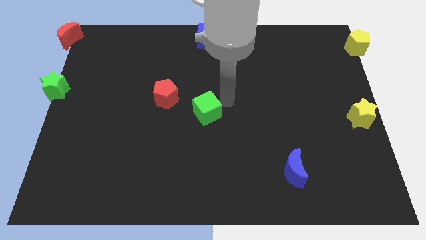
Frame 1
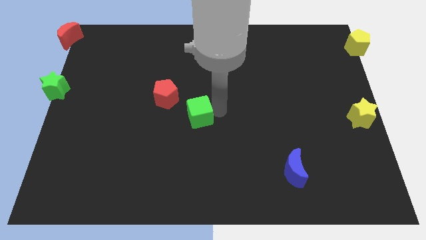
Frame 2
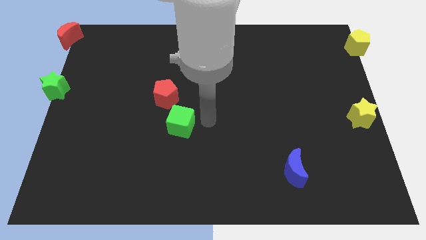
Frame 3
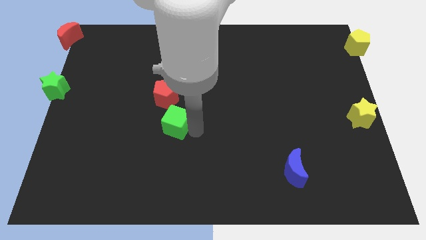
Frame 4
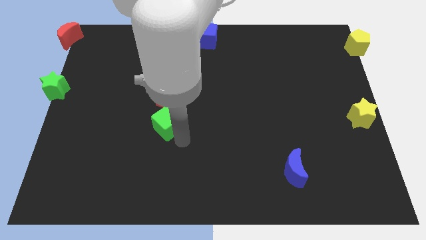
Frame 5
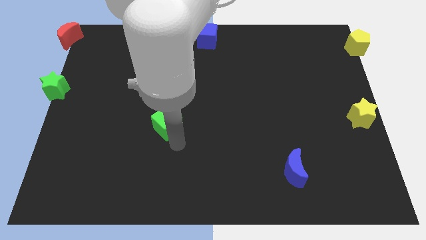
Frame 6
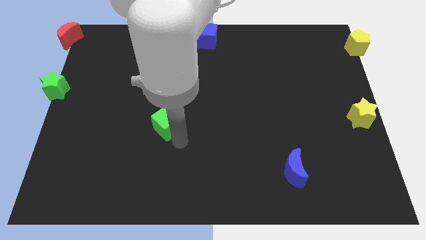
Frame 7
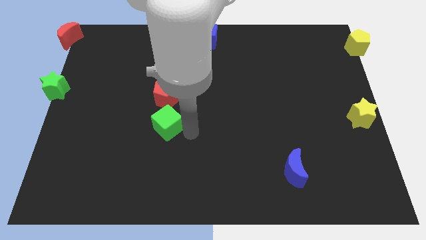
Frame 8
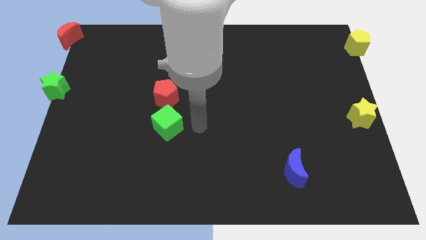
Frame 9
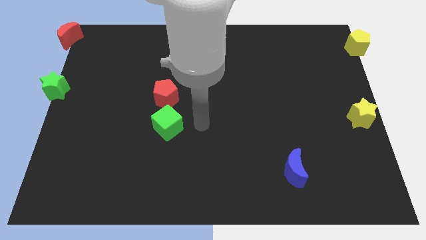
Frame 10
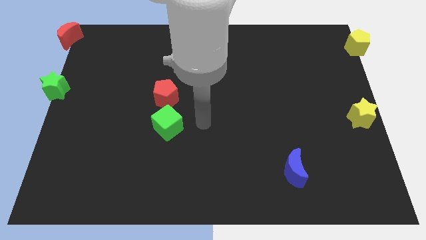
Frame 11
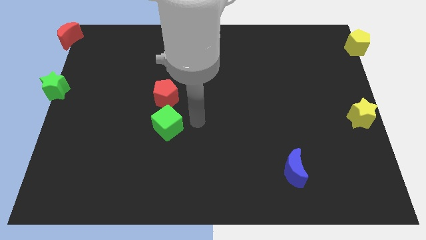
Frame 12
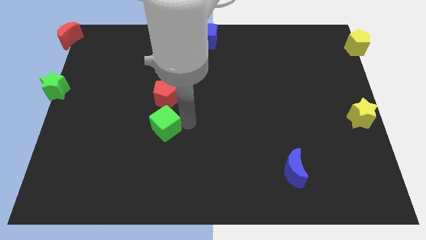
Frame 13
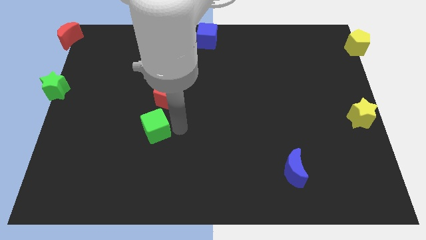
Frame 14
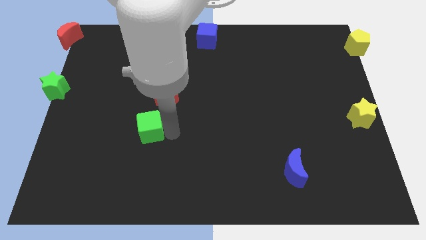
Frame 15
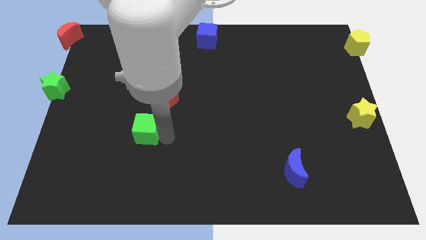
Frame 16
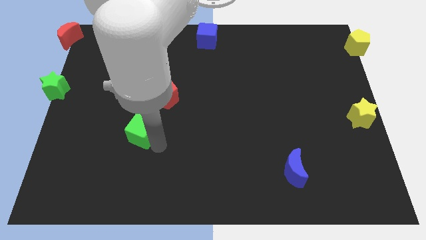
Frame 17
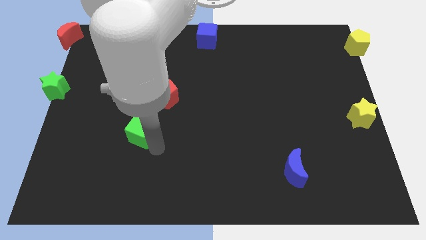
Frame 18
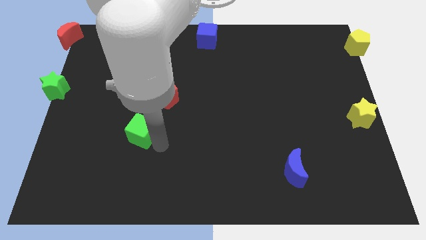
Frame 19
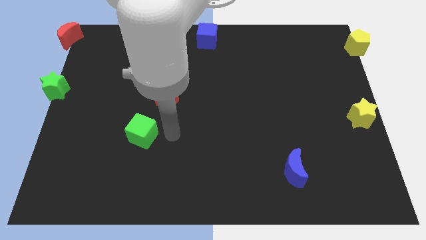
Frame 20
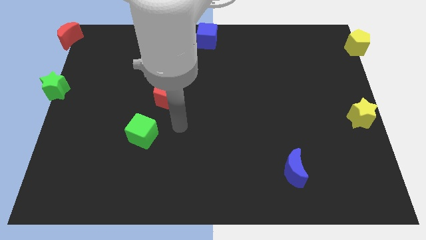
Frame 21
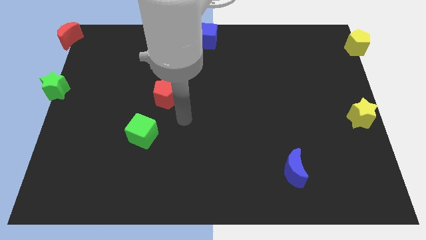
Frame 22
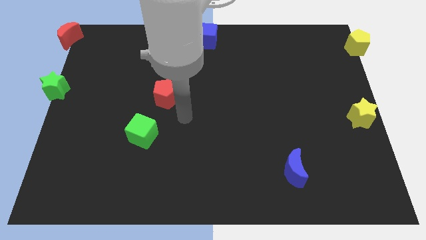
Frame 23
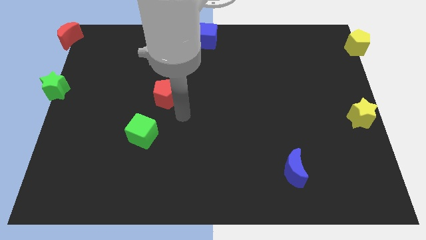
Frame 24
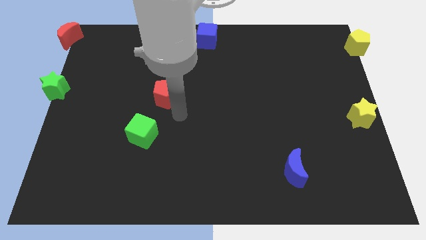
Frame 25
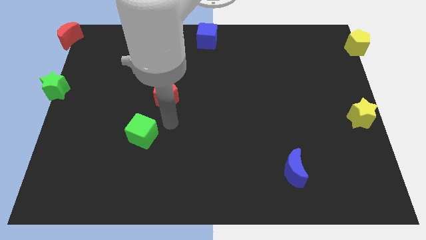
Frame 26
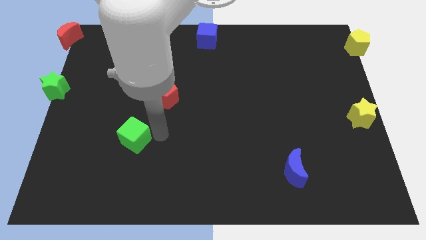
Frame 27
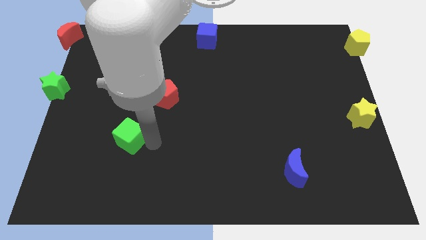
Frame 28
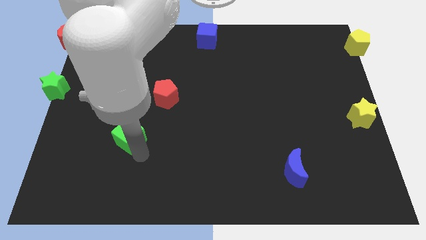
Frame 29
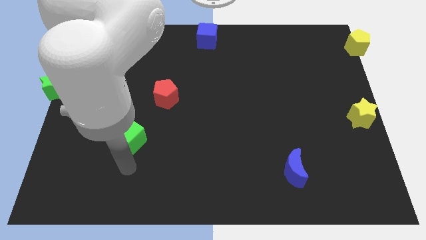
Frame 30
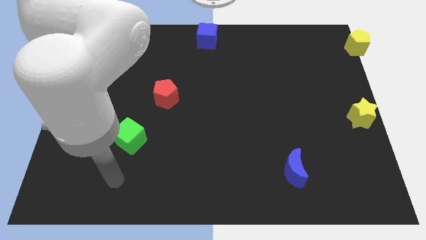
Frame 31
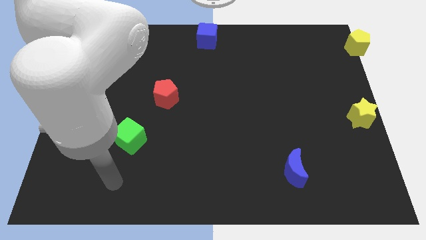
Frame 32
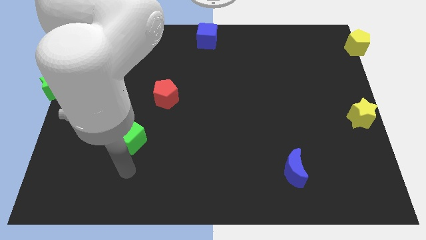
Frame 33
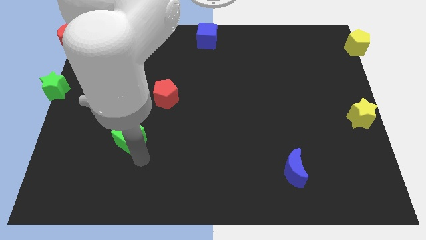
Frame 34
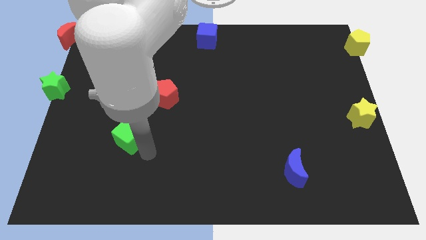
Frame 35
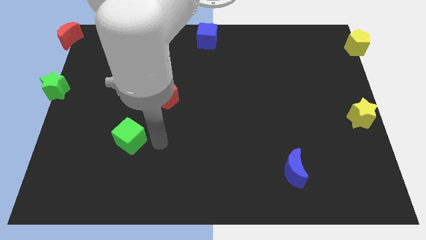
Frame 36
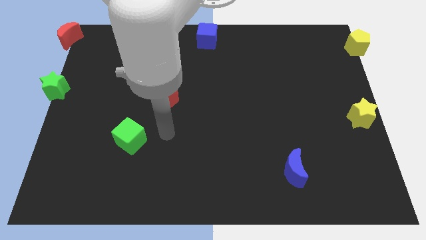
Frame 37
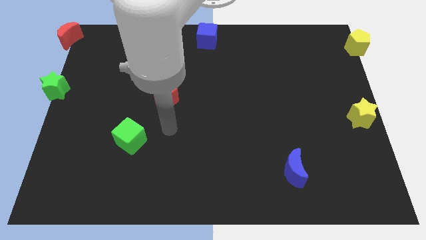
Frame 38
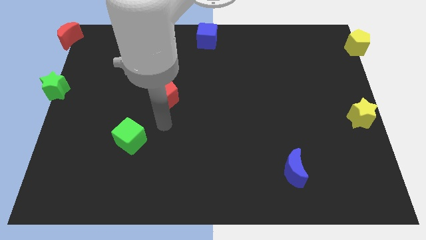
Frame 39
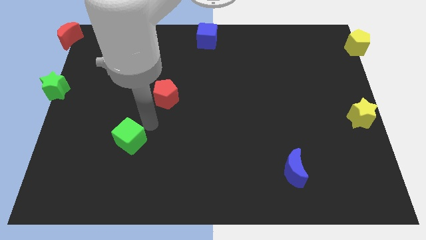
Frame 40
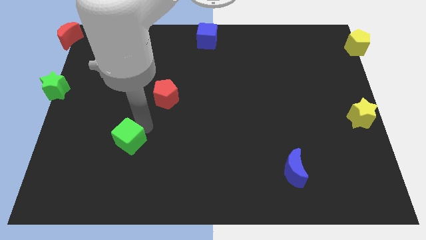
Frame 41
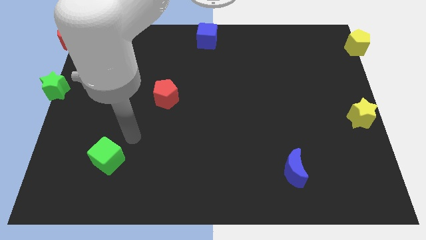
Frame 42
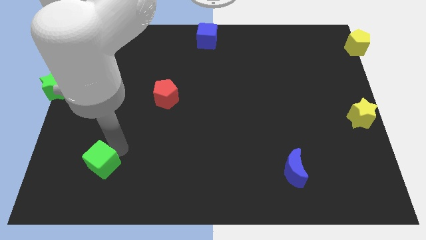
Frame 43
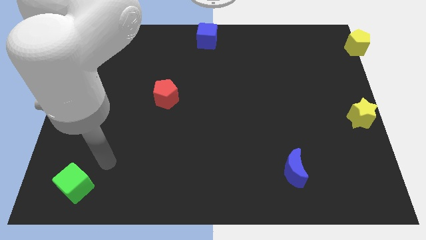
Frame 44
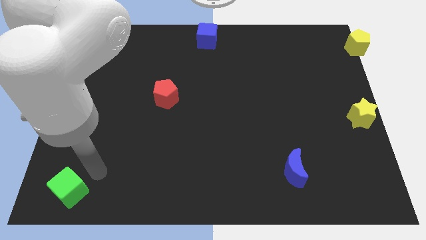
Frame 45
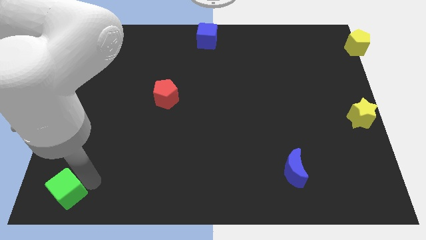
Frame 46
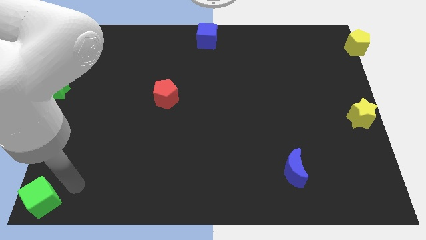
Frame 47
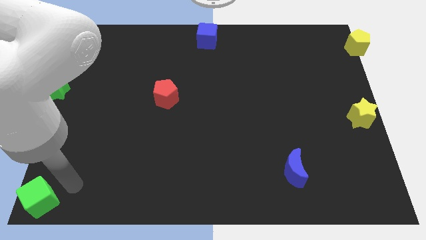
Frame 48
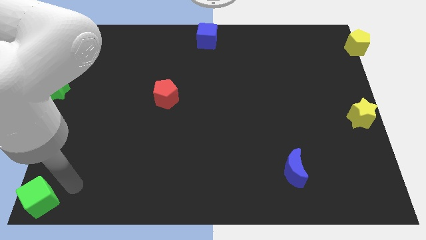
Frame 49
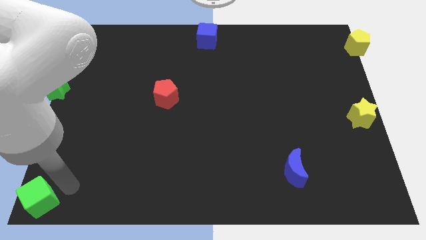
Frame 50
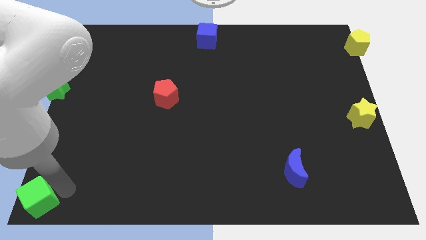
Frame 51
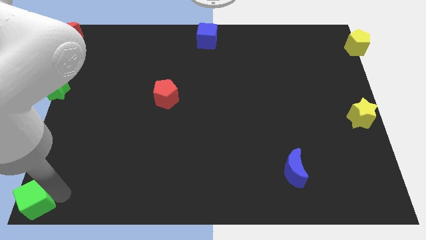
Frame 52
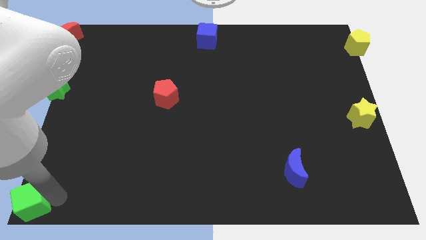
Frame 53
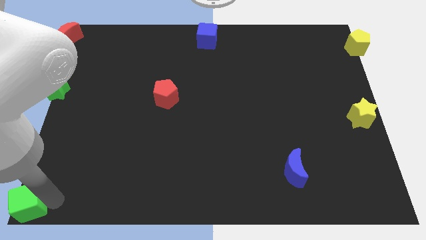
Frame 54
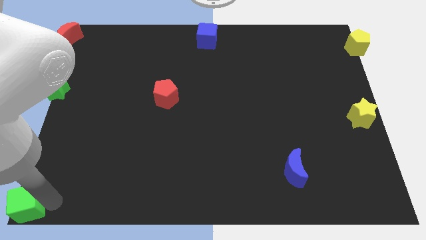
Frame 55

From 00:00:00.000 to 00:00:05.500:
place the green cube into the bottom left corner

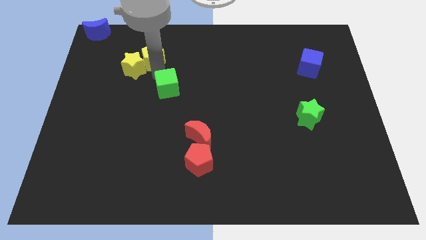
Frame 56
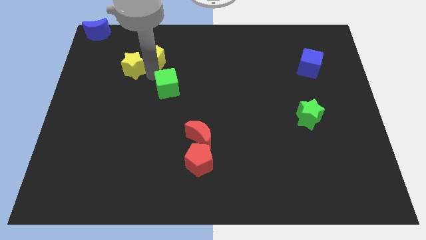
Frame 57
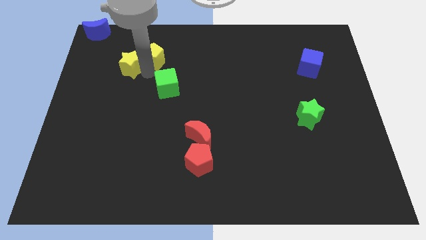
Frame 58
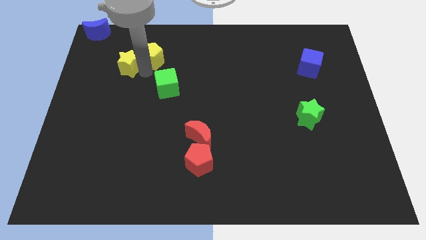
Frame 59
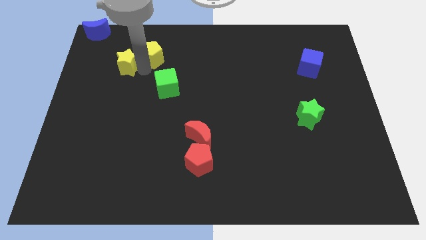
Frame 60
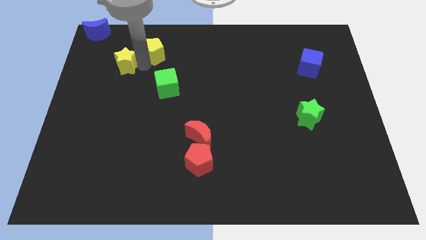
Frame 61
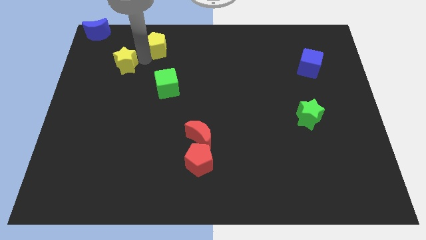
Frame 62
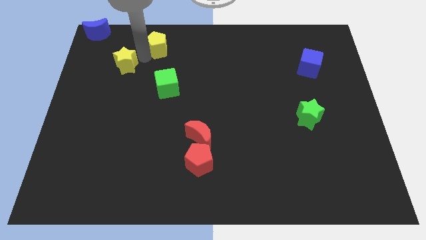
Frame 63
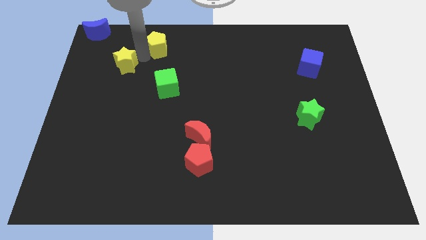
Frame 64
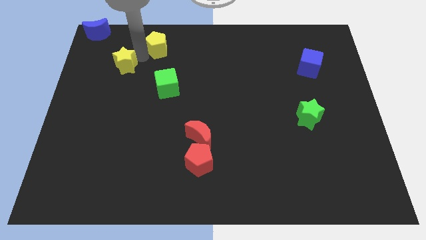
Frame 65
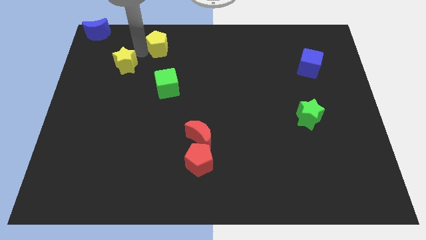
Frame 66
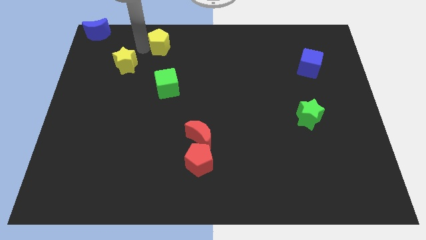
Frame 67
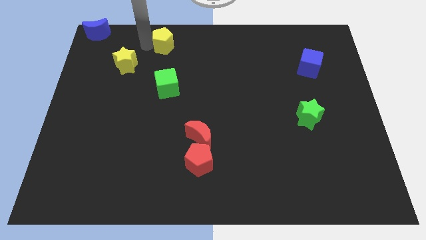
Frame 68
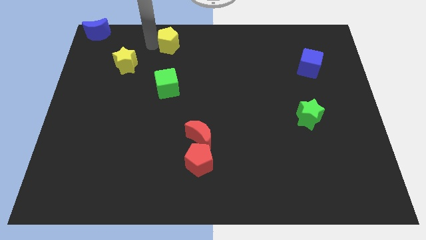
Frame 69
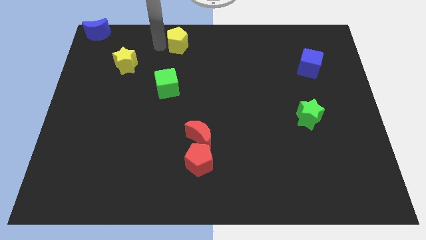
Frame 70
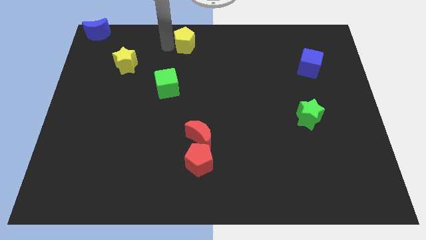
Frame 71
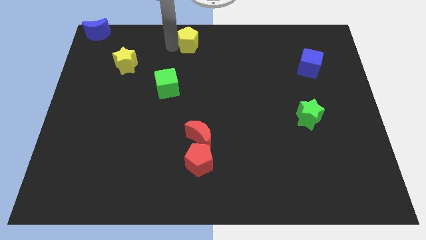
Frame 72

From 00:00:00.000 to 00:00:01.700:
separate the yellow star and the yellow pentagon

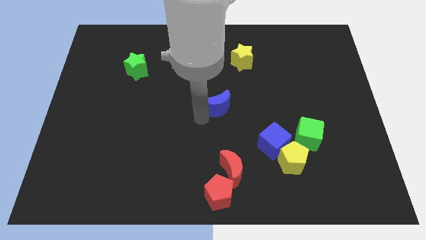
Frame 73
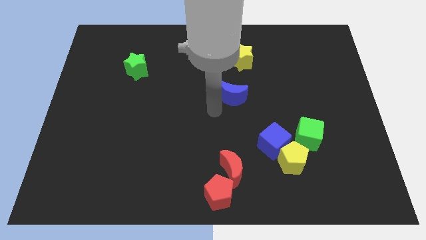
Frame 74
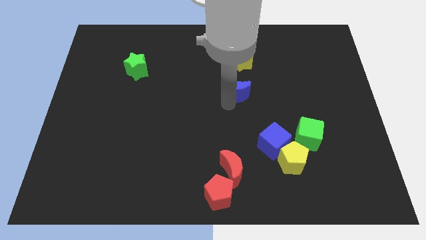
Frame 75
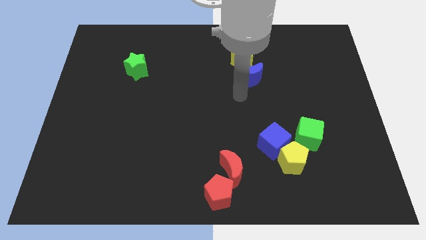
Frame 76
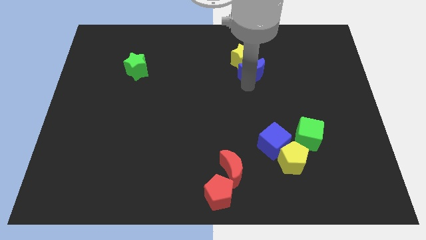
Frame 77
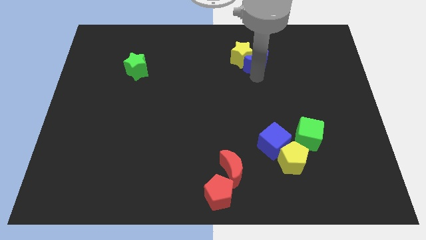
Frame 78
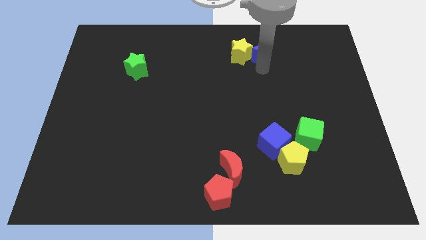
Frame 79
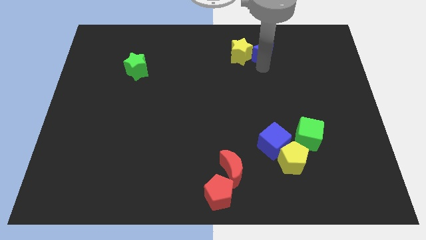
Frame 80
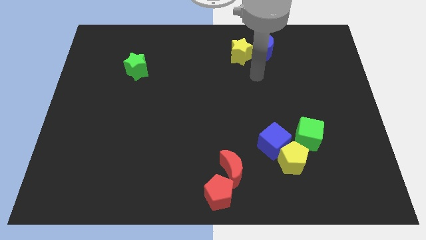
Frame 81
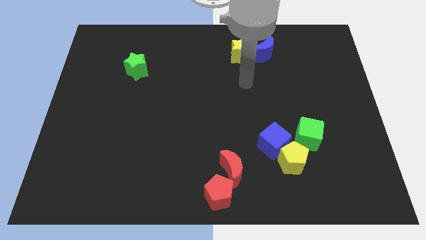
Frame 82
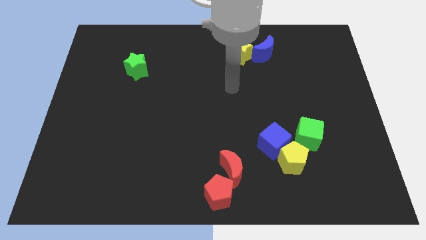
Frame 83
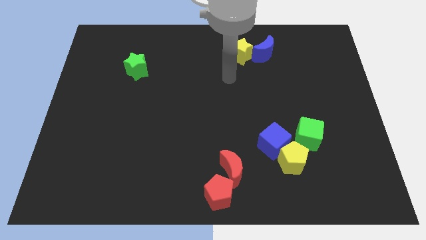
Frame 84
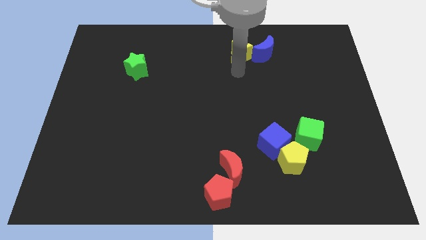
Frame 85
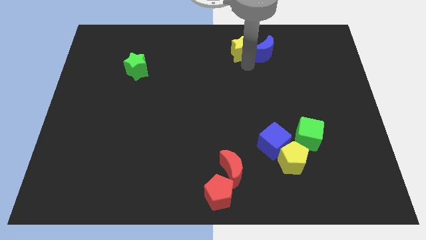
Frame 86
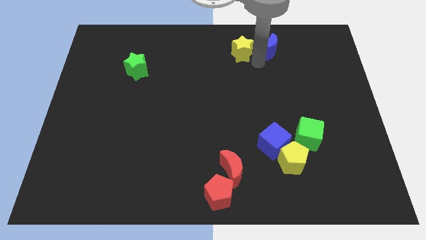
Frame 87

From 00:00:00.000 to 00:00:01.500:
move the blue moon to the right side of the yellow star

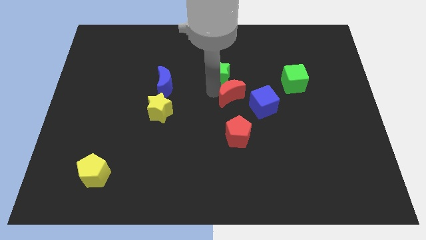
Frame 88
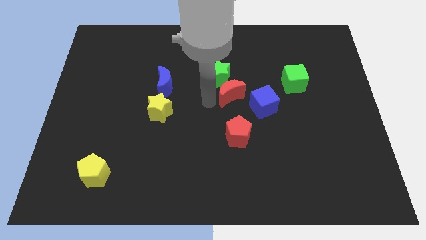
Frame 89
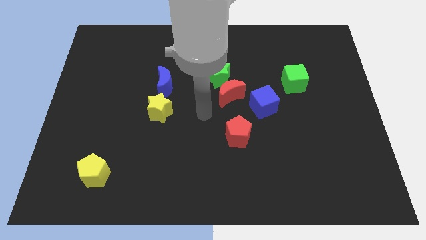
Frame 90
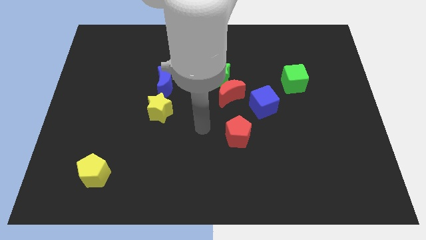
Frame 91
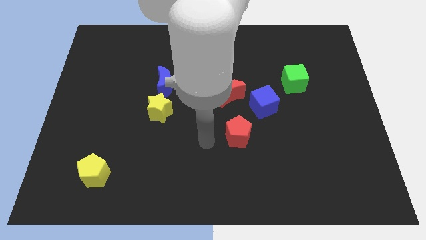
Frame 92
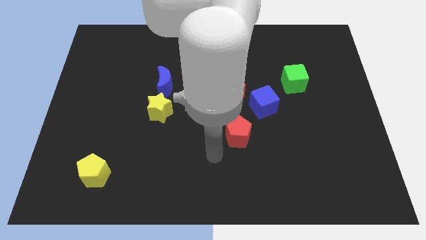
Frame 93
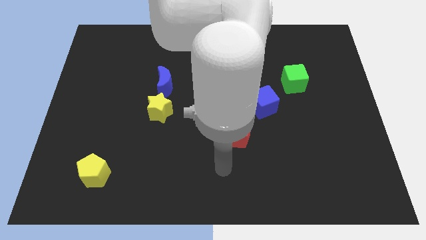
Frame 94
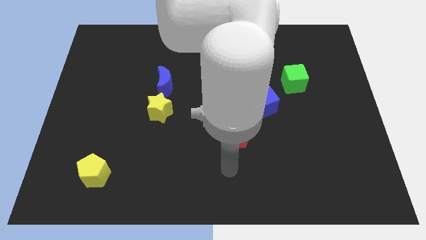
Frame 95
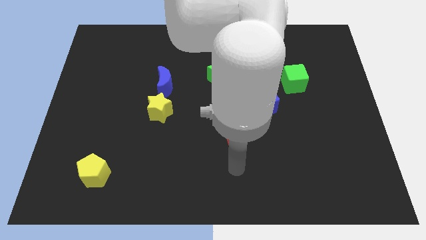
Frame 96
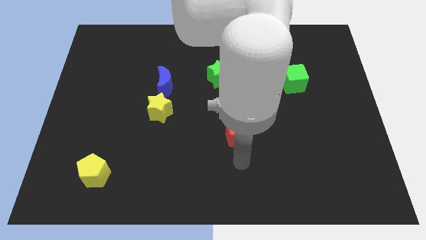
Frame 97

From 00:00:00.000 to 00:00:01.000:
point your hand at the bottom of the red pentagon
